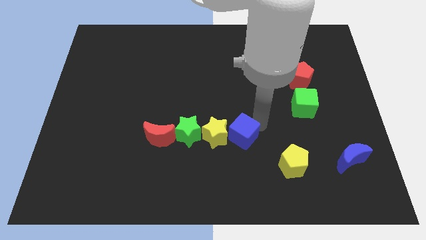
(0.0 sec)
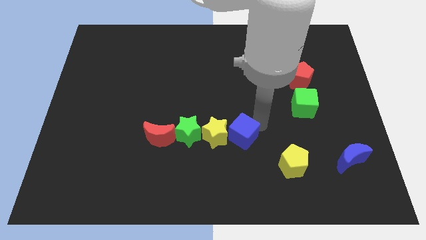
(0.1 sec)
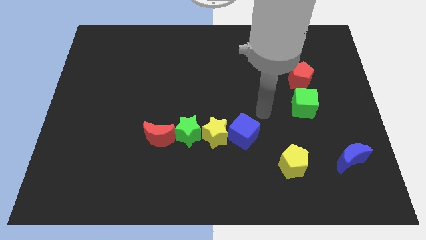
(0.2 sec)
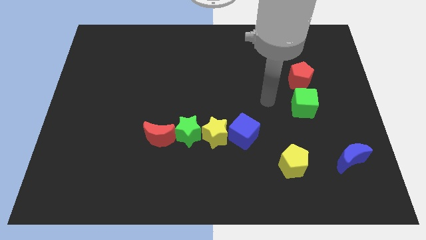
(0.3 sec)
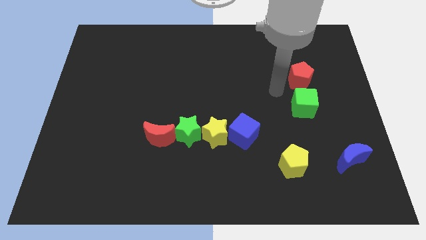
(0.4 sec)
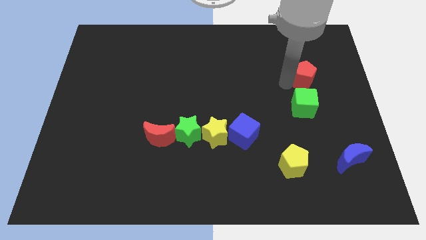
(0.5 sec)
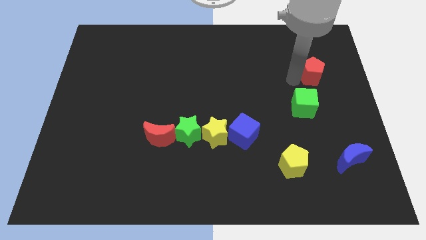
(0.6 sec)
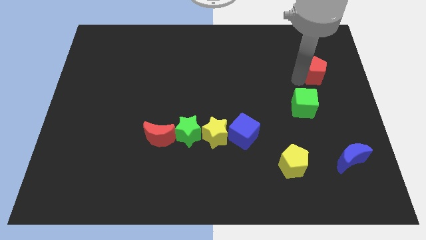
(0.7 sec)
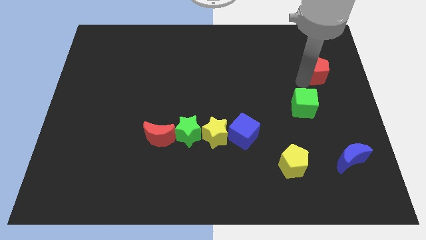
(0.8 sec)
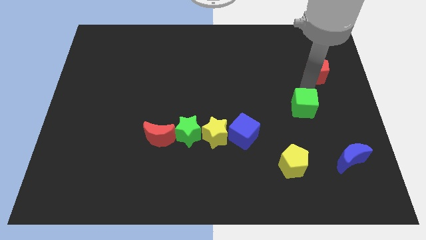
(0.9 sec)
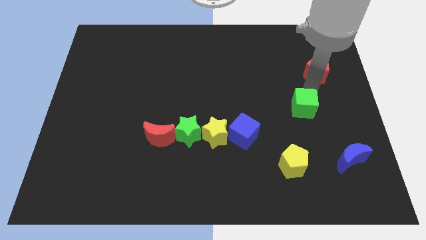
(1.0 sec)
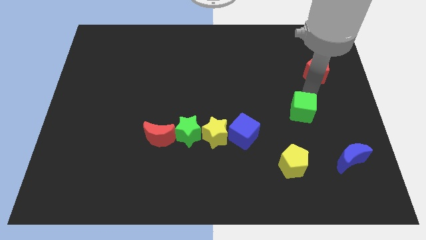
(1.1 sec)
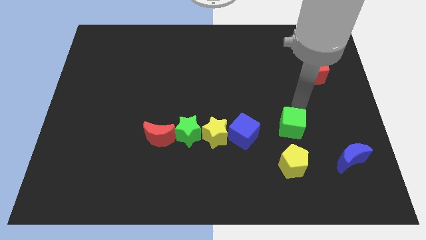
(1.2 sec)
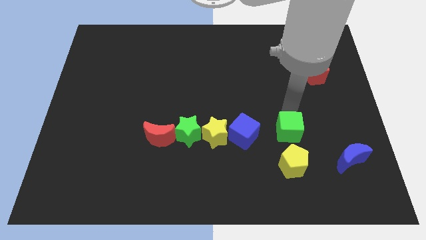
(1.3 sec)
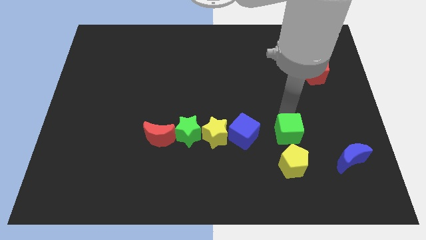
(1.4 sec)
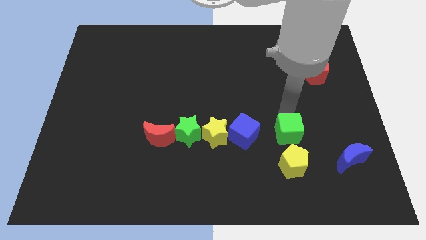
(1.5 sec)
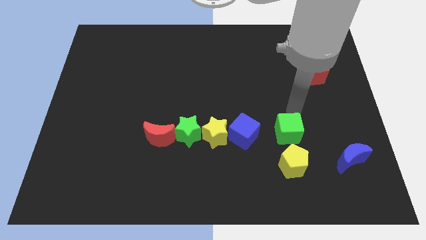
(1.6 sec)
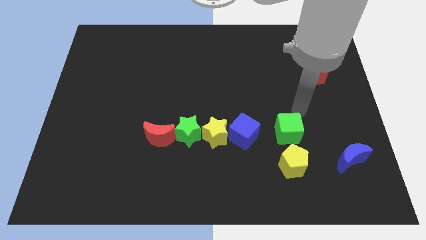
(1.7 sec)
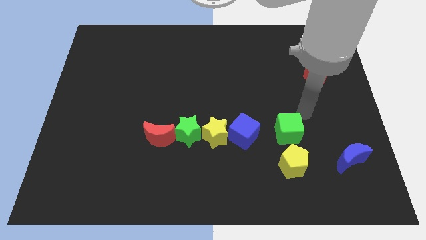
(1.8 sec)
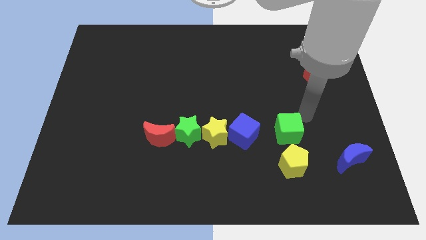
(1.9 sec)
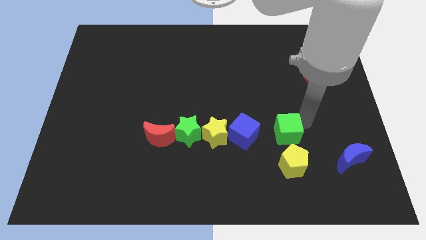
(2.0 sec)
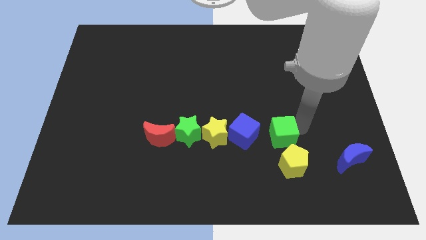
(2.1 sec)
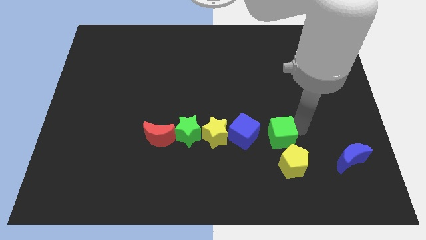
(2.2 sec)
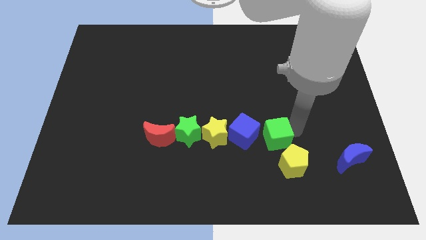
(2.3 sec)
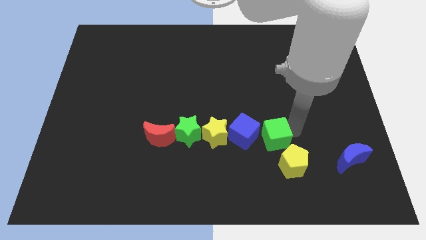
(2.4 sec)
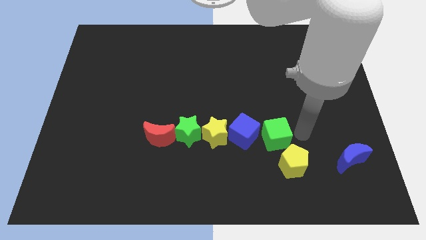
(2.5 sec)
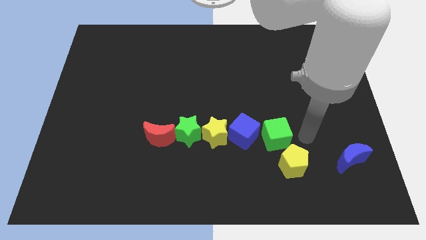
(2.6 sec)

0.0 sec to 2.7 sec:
place the green cube to the right of the blue cube

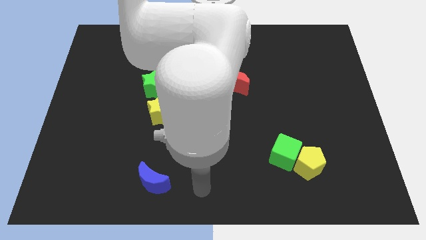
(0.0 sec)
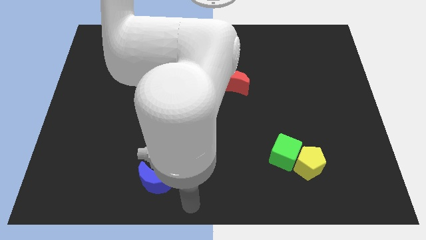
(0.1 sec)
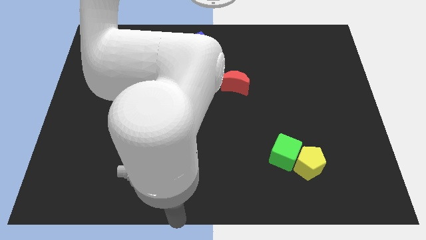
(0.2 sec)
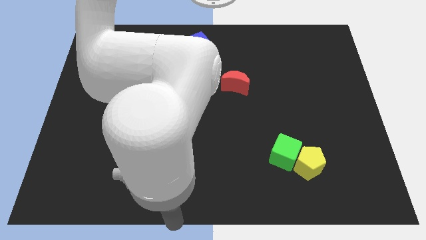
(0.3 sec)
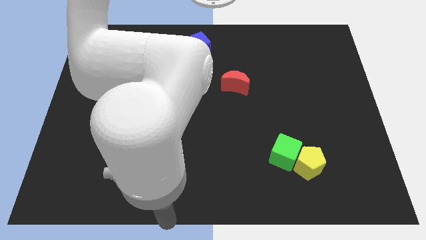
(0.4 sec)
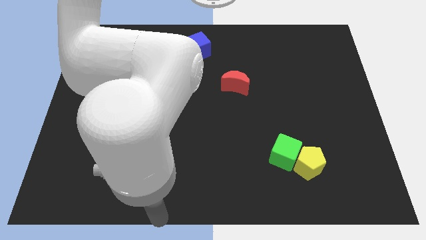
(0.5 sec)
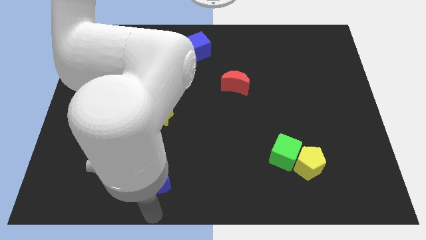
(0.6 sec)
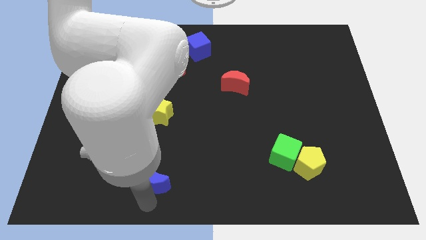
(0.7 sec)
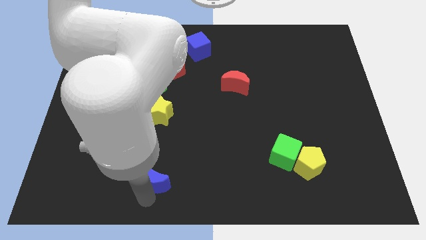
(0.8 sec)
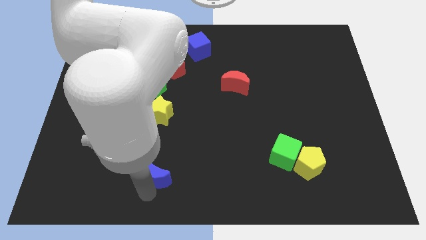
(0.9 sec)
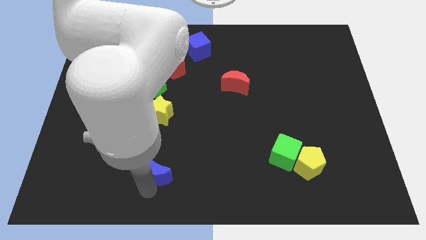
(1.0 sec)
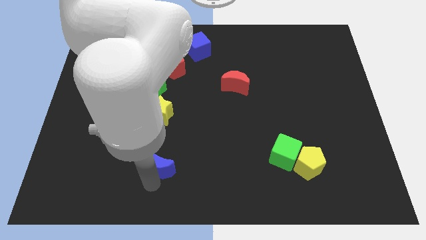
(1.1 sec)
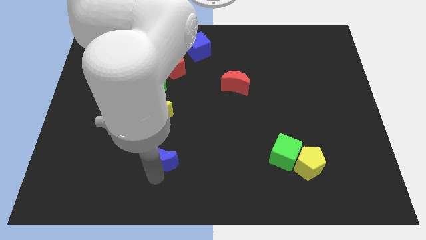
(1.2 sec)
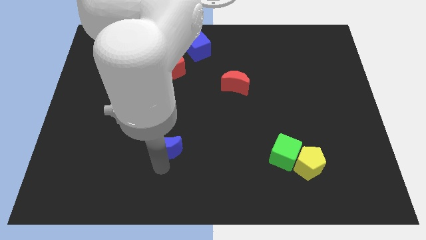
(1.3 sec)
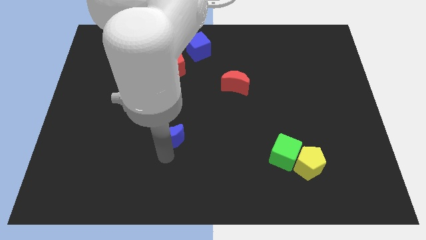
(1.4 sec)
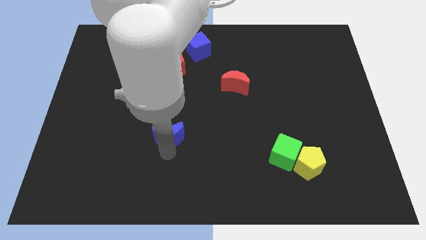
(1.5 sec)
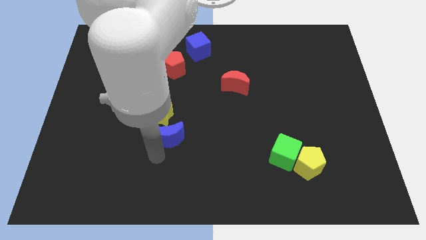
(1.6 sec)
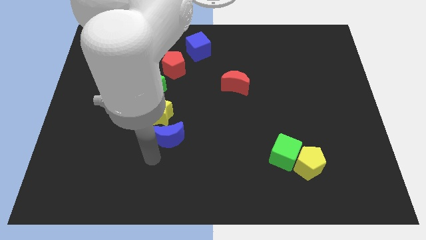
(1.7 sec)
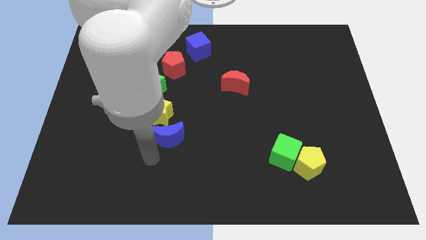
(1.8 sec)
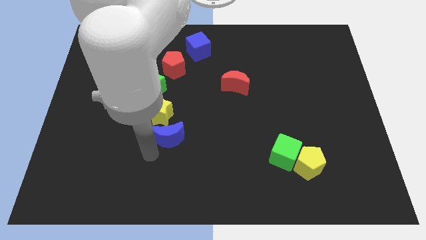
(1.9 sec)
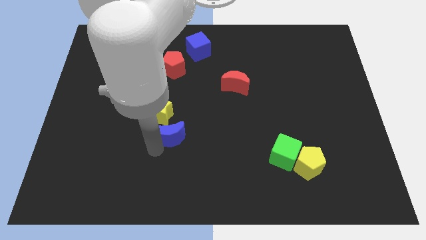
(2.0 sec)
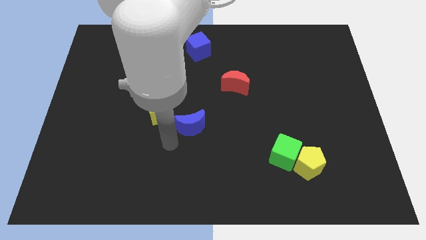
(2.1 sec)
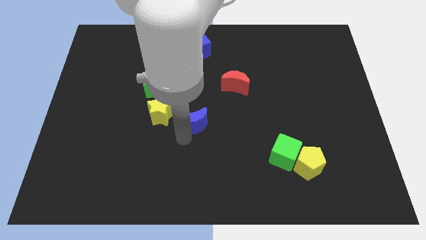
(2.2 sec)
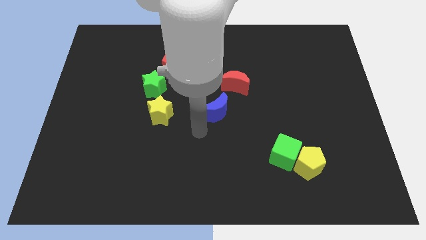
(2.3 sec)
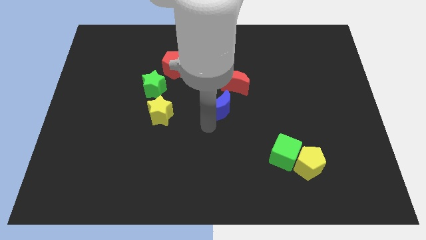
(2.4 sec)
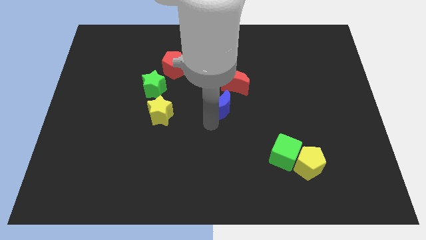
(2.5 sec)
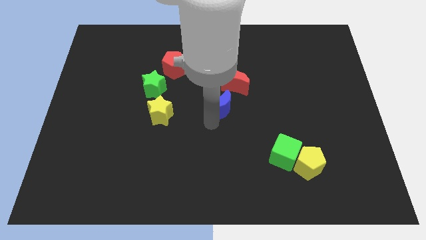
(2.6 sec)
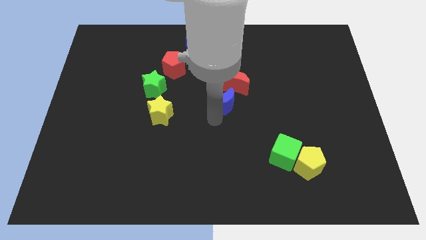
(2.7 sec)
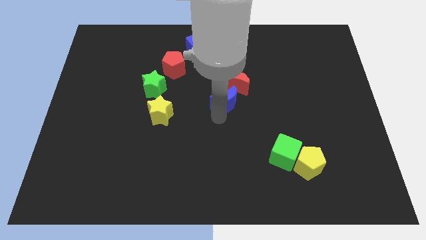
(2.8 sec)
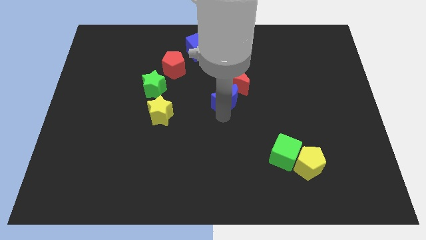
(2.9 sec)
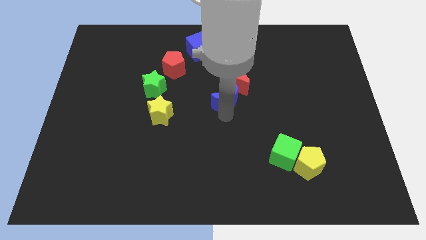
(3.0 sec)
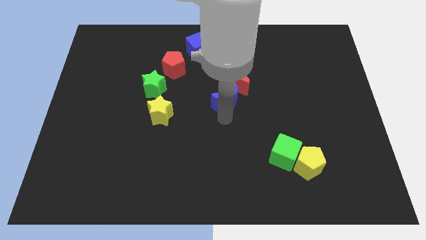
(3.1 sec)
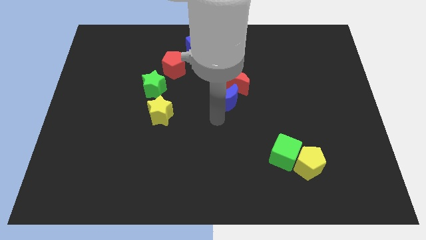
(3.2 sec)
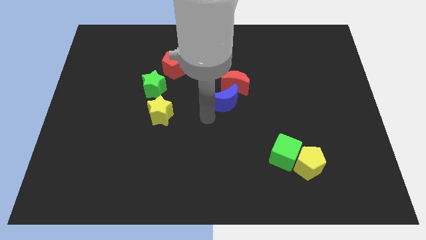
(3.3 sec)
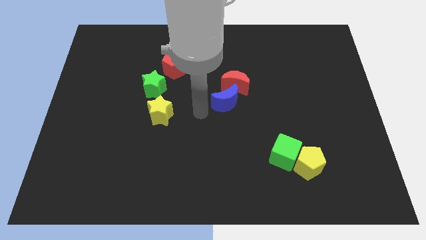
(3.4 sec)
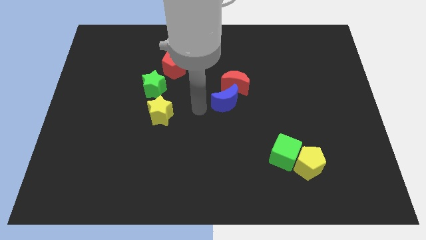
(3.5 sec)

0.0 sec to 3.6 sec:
place the blue moon below red moon

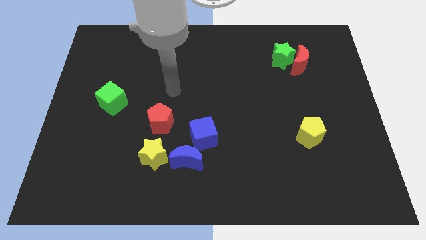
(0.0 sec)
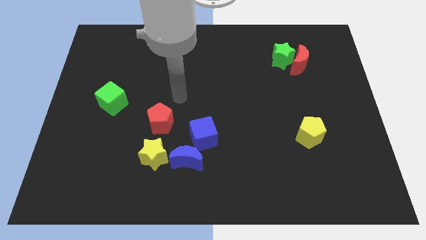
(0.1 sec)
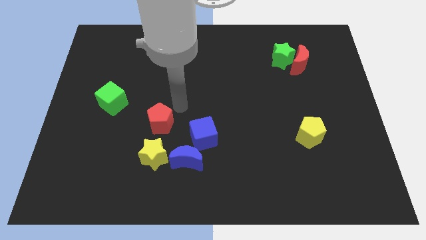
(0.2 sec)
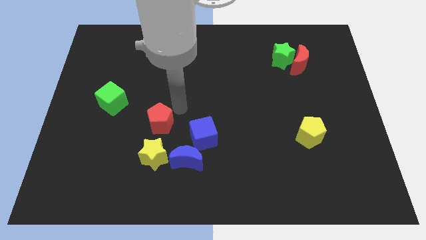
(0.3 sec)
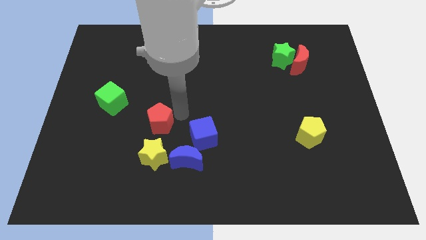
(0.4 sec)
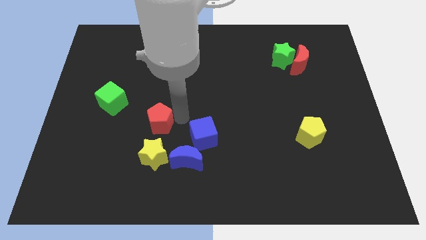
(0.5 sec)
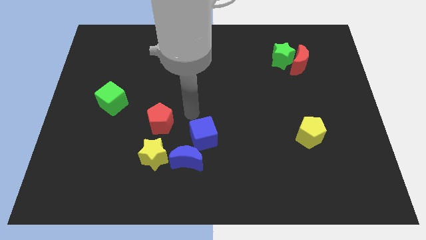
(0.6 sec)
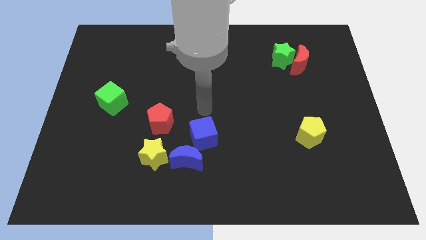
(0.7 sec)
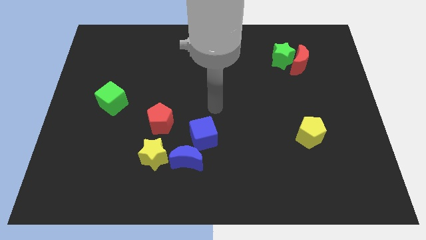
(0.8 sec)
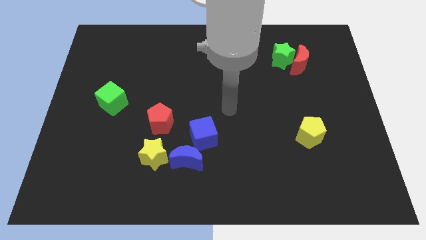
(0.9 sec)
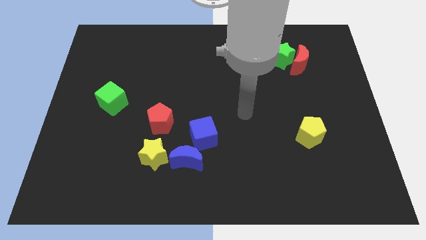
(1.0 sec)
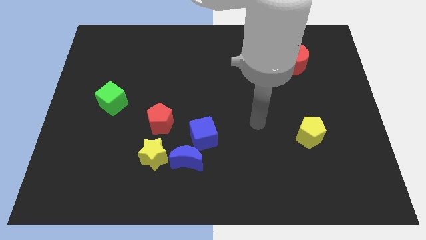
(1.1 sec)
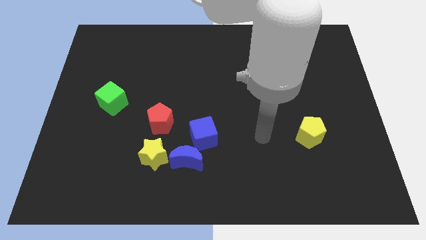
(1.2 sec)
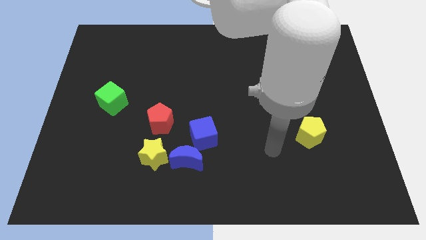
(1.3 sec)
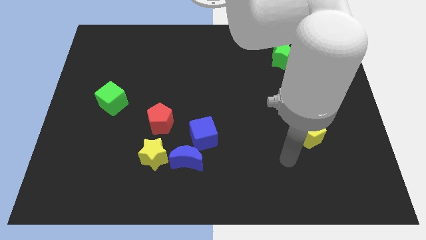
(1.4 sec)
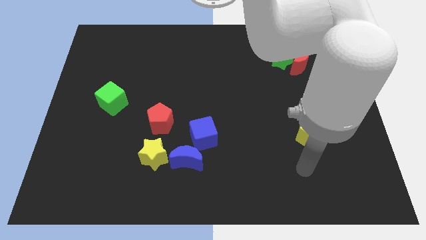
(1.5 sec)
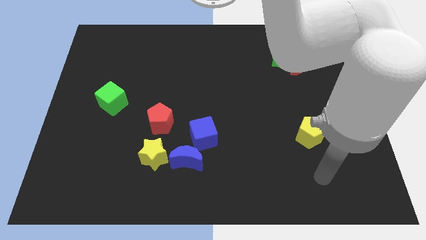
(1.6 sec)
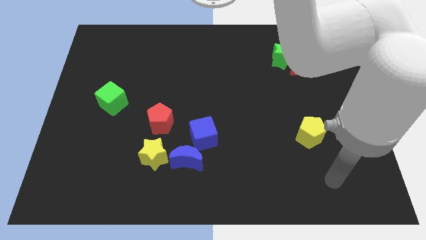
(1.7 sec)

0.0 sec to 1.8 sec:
point your arm parallel to yellow pentagon

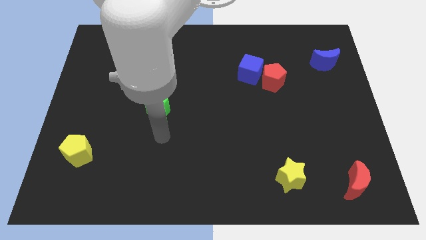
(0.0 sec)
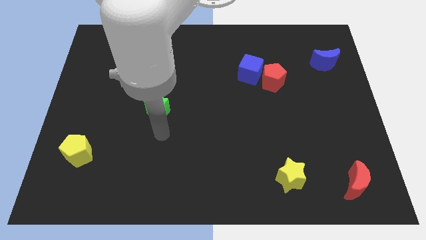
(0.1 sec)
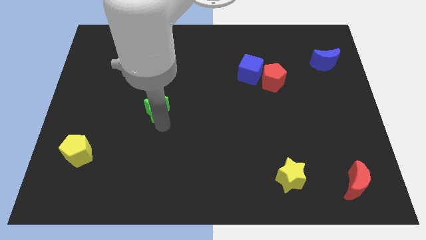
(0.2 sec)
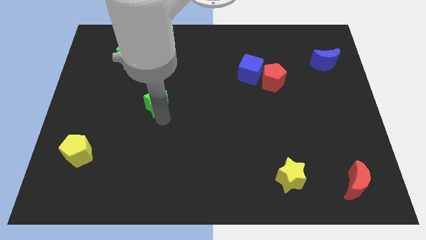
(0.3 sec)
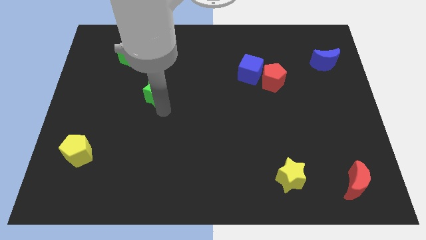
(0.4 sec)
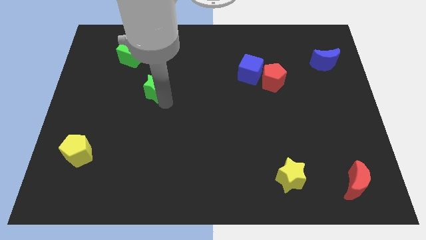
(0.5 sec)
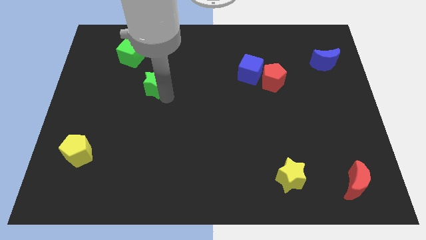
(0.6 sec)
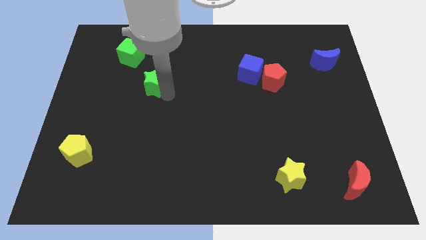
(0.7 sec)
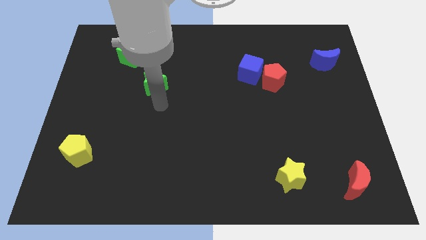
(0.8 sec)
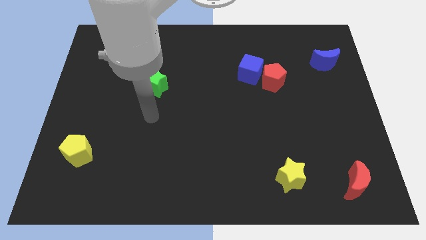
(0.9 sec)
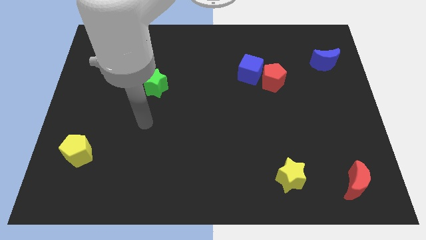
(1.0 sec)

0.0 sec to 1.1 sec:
push the green star upwards slightly
